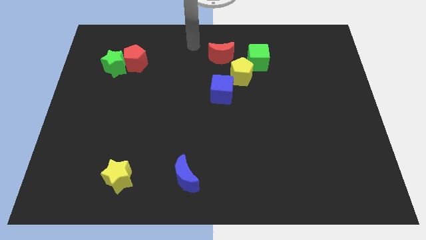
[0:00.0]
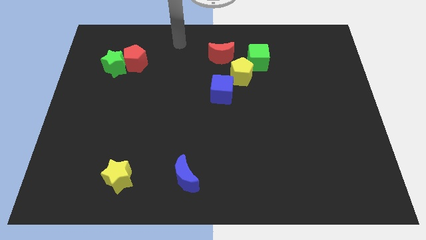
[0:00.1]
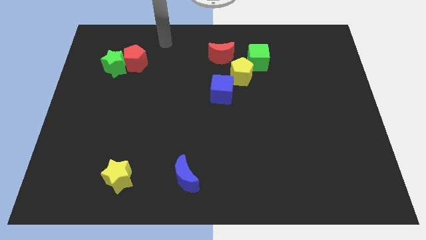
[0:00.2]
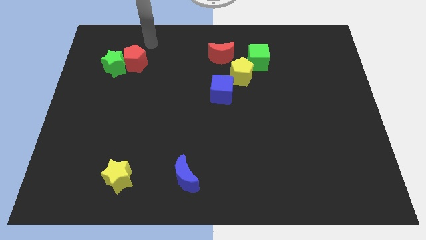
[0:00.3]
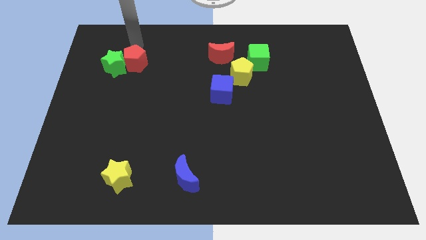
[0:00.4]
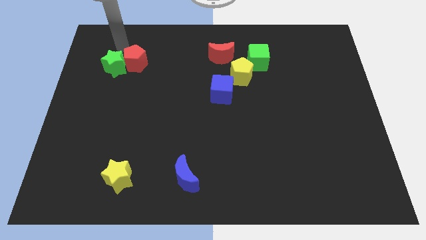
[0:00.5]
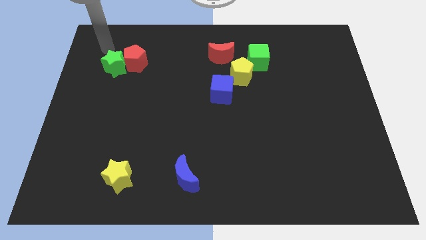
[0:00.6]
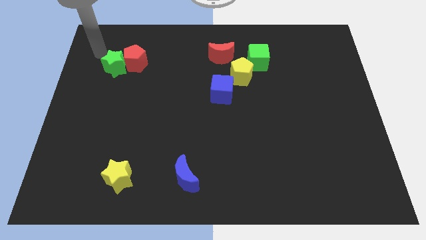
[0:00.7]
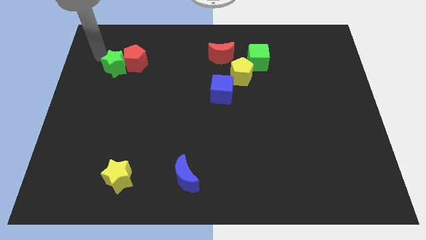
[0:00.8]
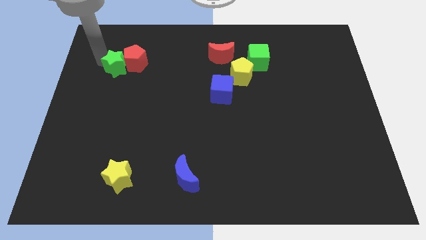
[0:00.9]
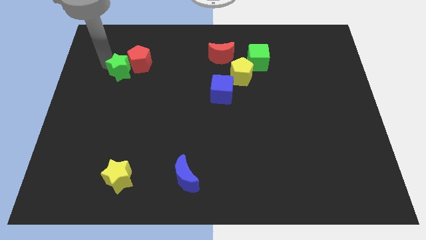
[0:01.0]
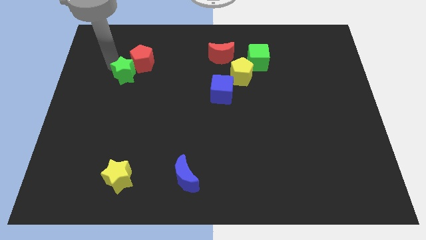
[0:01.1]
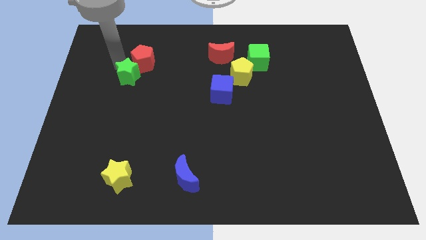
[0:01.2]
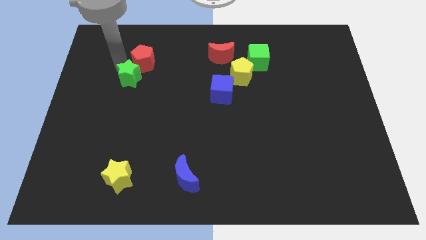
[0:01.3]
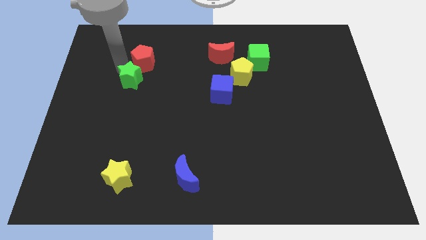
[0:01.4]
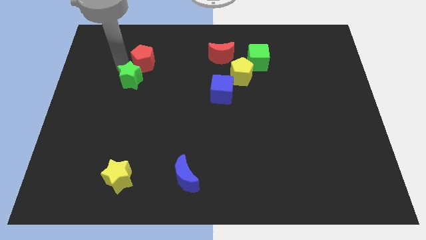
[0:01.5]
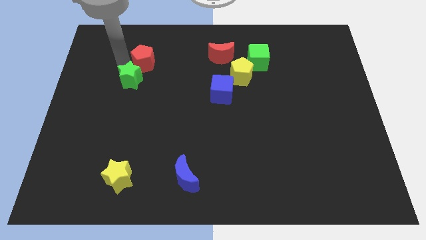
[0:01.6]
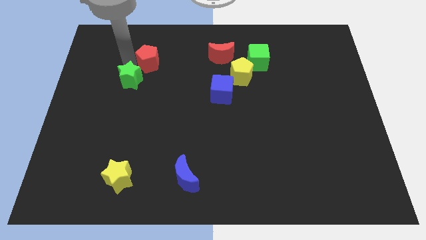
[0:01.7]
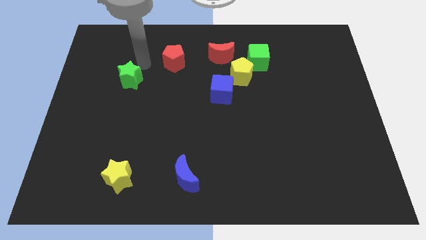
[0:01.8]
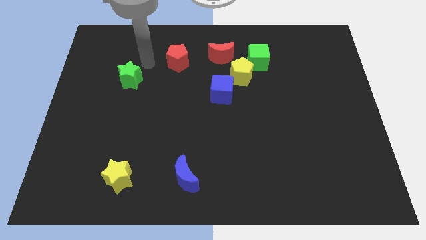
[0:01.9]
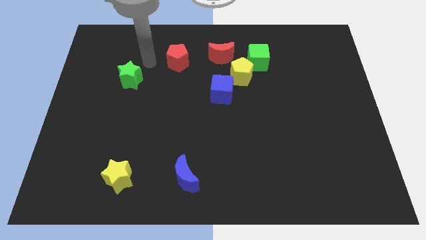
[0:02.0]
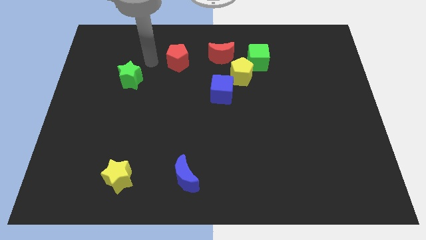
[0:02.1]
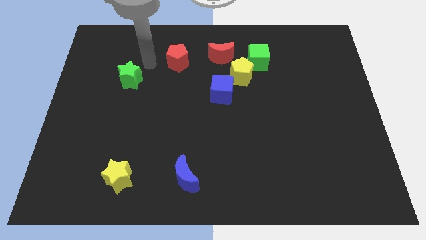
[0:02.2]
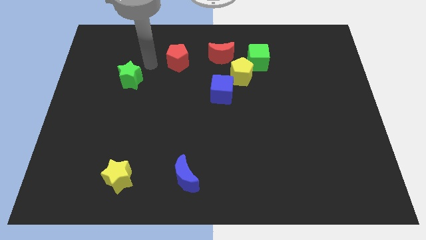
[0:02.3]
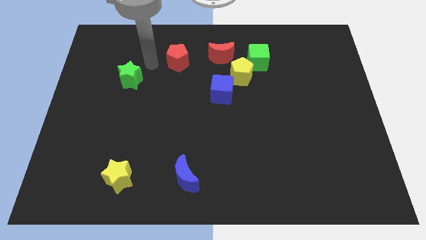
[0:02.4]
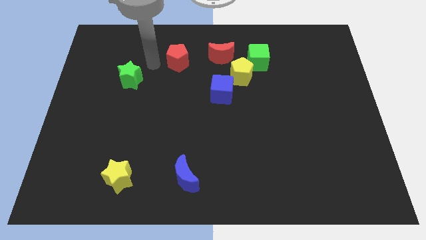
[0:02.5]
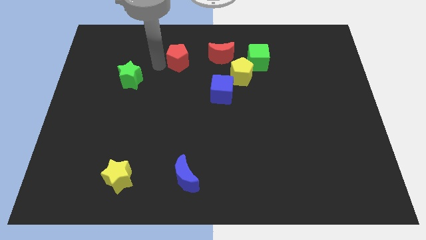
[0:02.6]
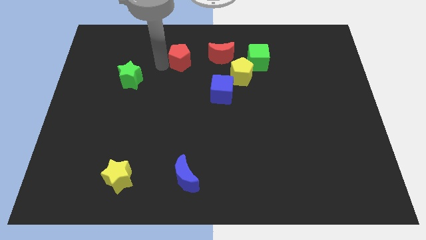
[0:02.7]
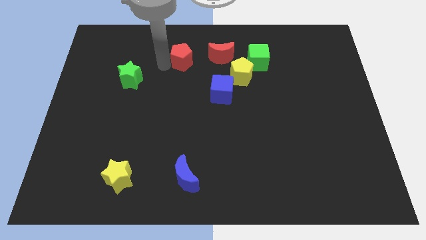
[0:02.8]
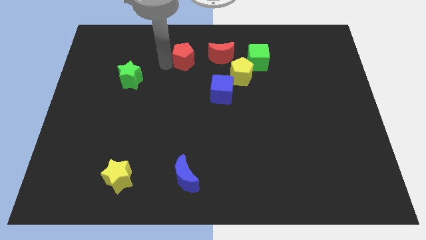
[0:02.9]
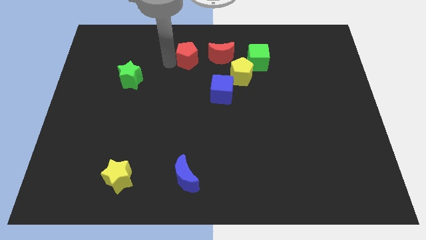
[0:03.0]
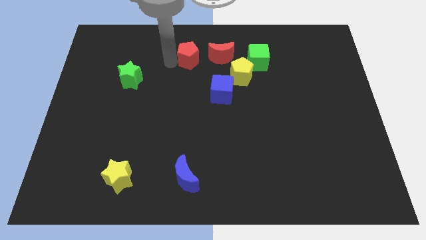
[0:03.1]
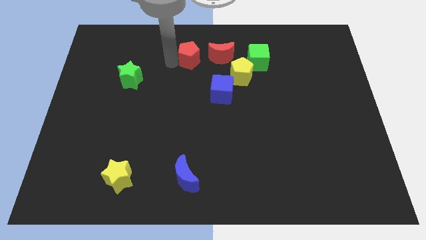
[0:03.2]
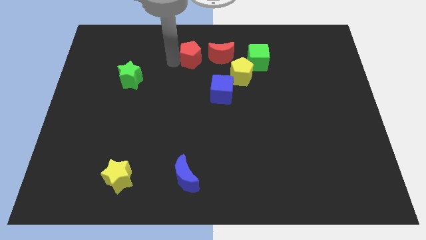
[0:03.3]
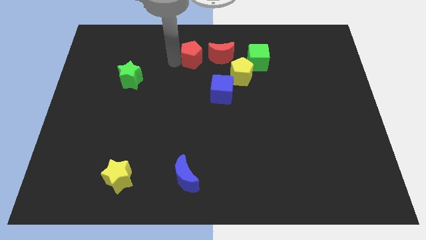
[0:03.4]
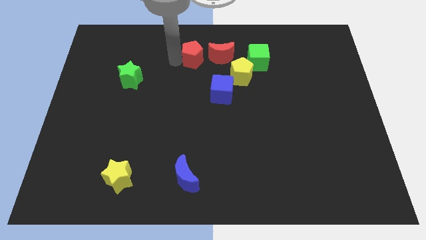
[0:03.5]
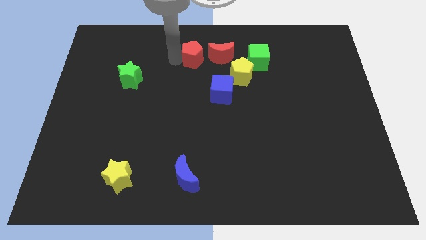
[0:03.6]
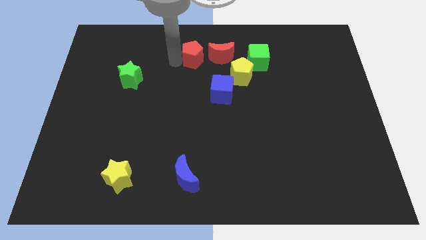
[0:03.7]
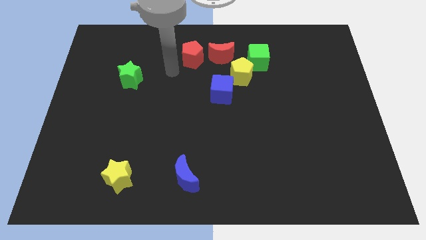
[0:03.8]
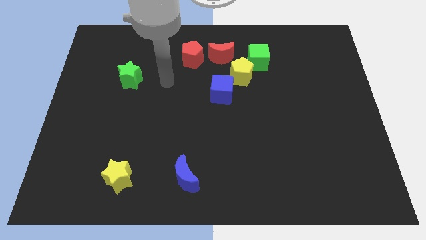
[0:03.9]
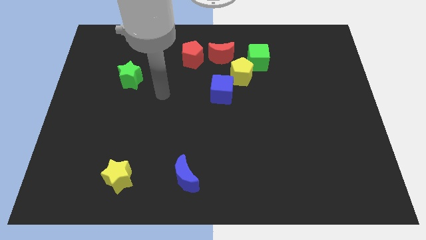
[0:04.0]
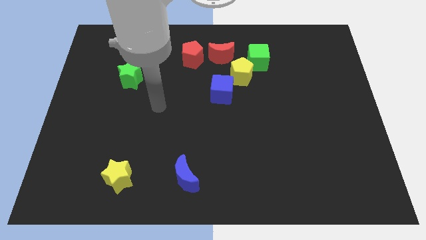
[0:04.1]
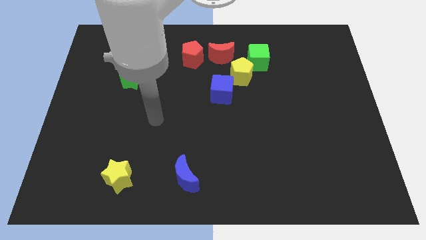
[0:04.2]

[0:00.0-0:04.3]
push the red pentagon to the left of the red crescent

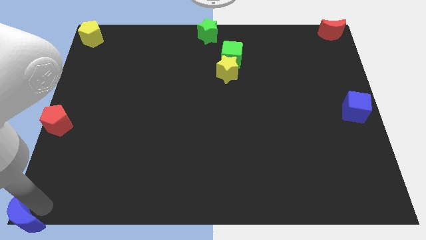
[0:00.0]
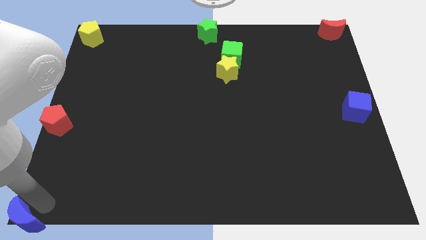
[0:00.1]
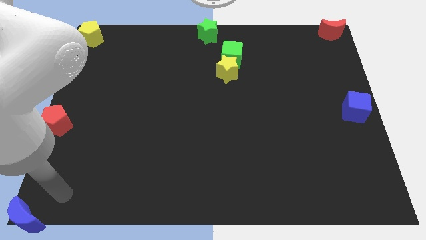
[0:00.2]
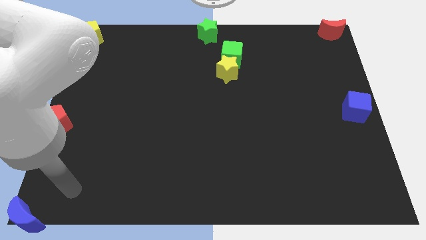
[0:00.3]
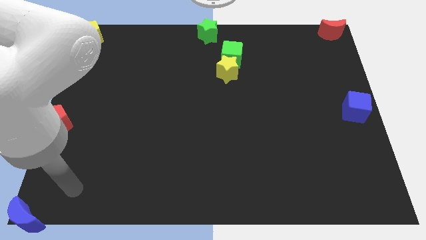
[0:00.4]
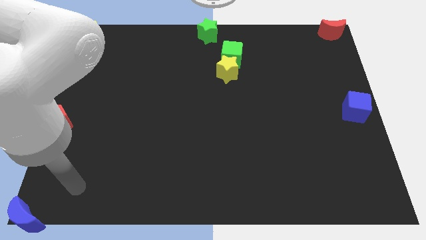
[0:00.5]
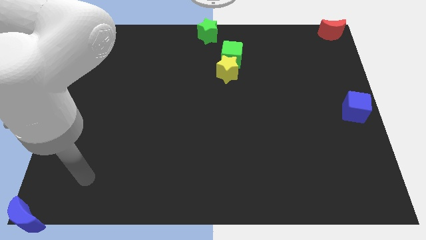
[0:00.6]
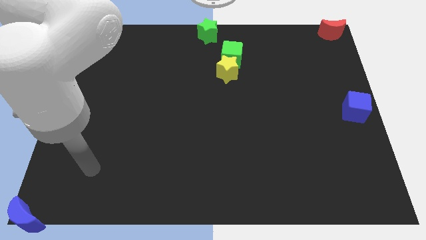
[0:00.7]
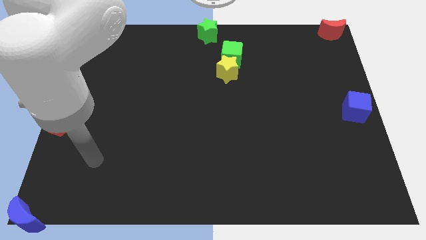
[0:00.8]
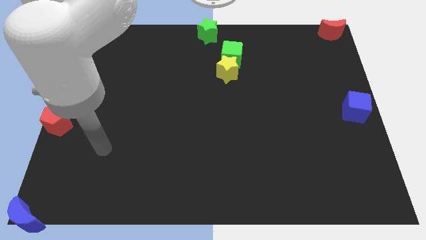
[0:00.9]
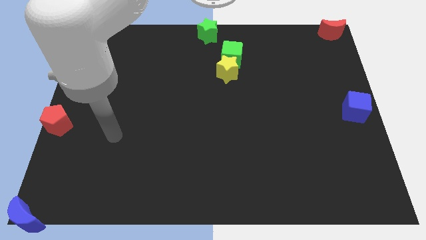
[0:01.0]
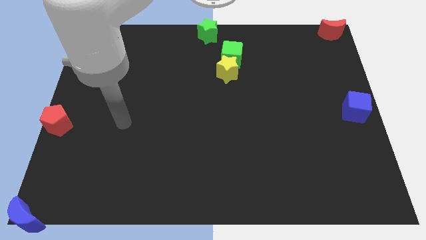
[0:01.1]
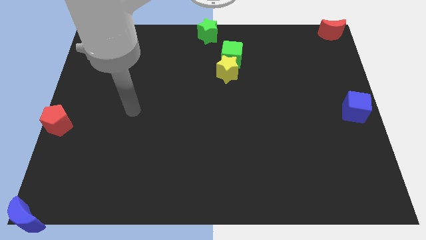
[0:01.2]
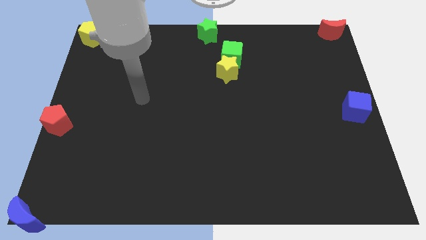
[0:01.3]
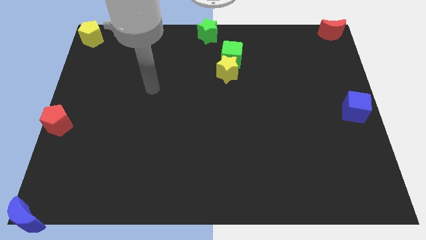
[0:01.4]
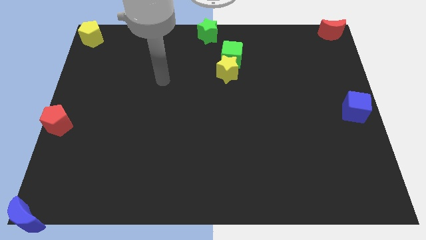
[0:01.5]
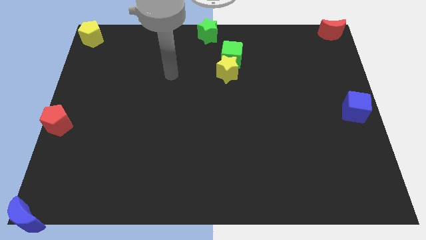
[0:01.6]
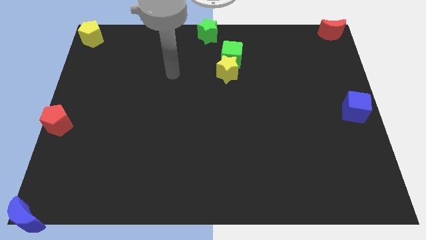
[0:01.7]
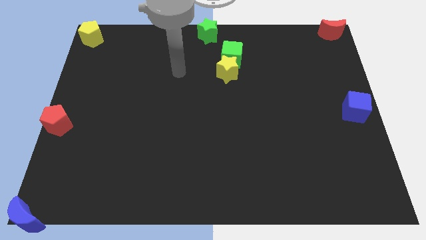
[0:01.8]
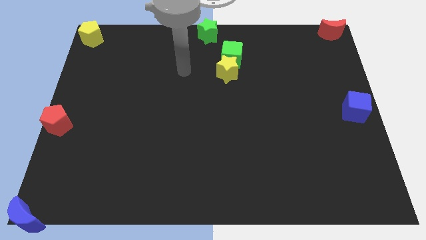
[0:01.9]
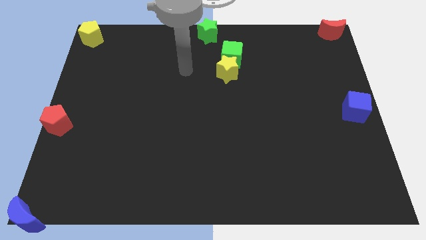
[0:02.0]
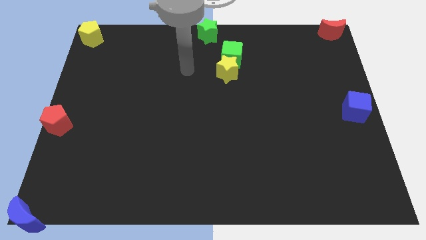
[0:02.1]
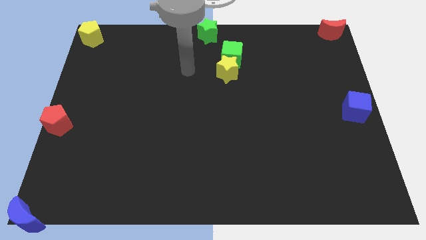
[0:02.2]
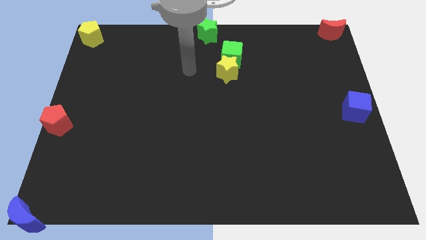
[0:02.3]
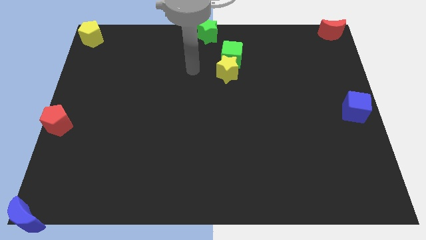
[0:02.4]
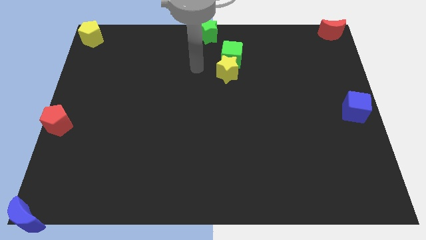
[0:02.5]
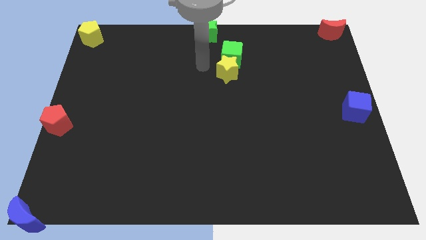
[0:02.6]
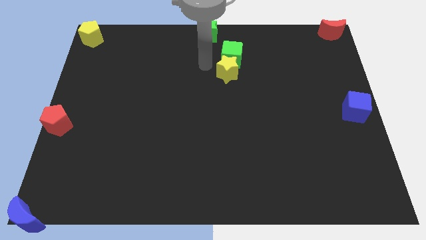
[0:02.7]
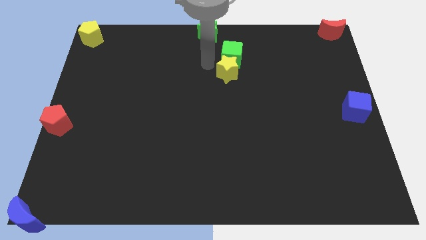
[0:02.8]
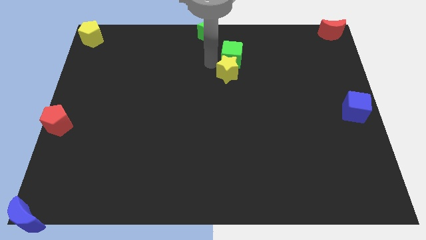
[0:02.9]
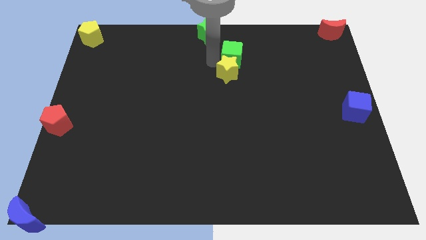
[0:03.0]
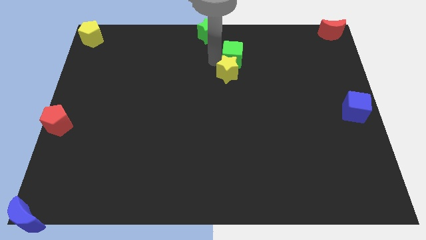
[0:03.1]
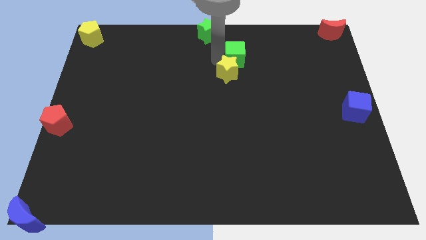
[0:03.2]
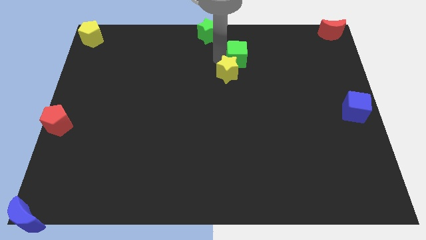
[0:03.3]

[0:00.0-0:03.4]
move your hand towards the green cube

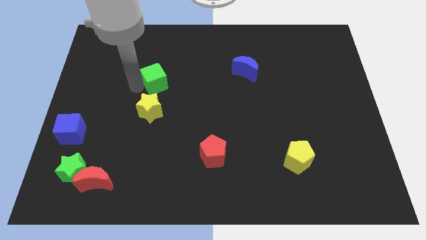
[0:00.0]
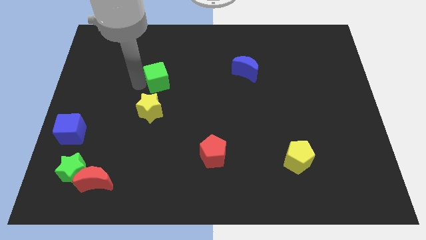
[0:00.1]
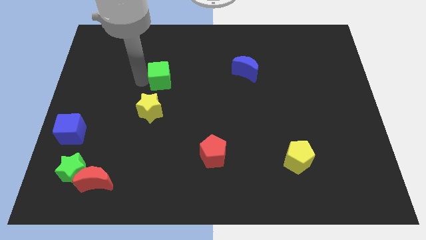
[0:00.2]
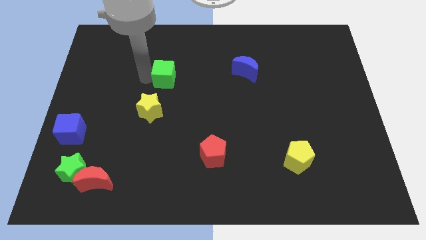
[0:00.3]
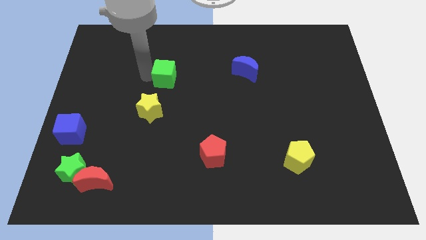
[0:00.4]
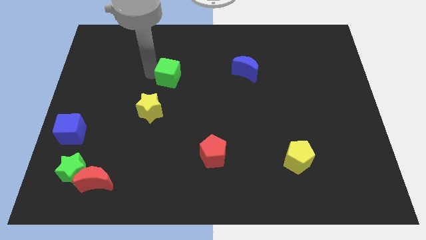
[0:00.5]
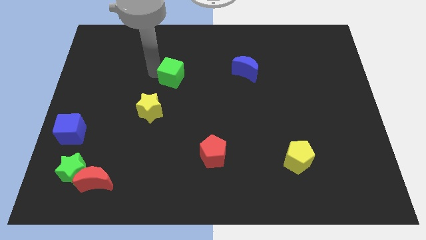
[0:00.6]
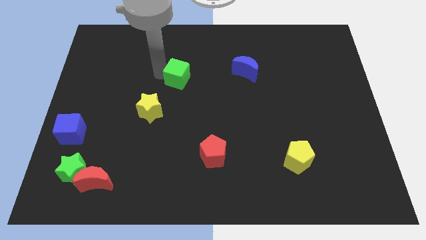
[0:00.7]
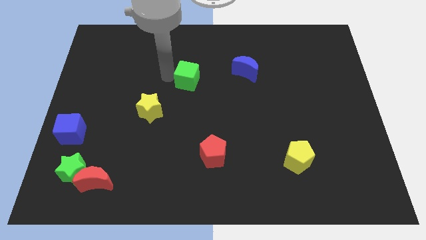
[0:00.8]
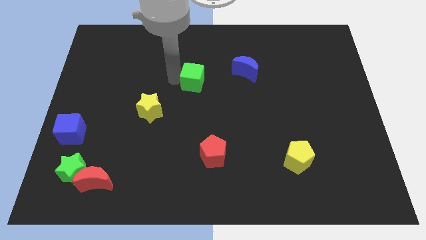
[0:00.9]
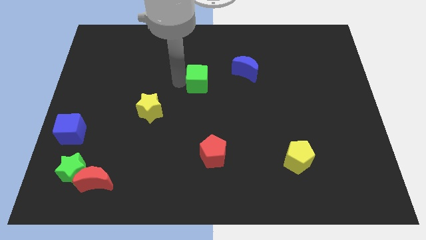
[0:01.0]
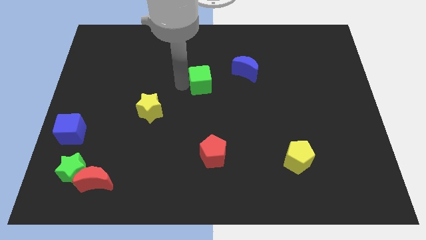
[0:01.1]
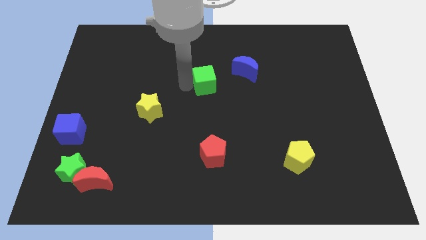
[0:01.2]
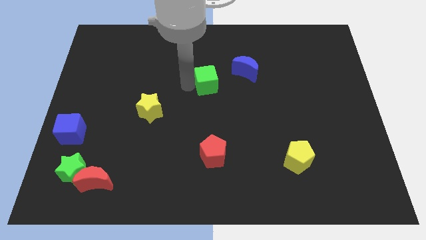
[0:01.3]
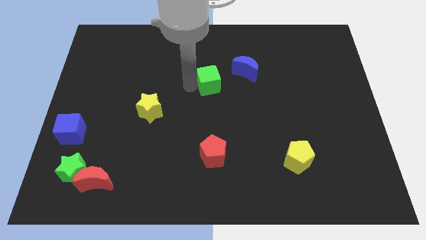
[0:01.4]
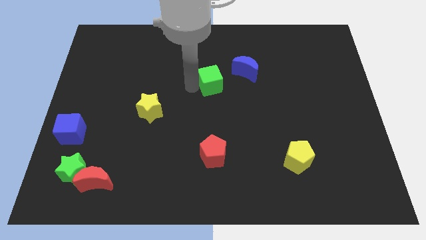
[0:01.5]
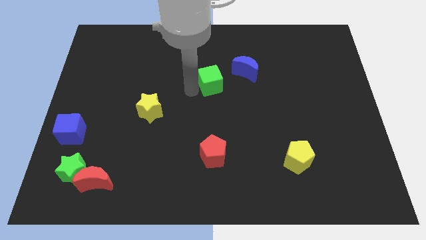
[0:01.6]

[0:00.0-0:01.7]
move the green cube away from the top side of the yellow star
